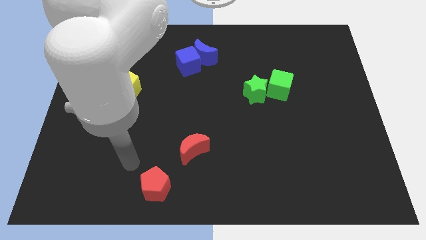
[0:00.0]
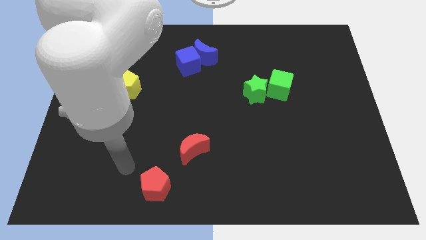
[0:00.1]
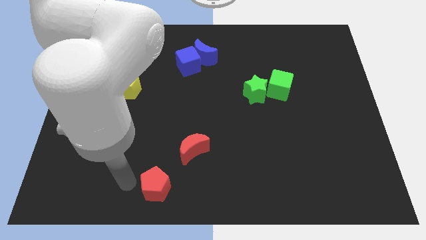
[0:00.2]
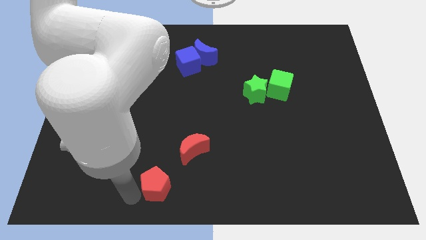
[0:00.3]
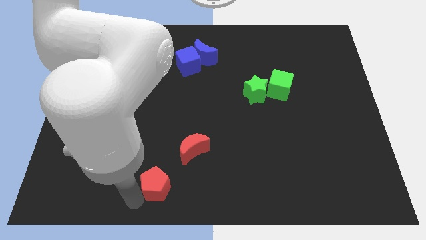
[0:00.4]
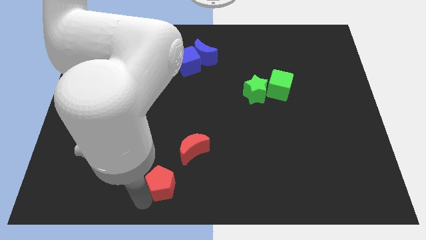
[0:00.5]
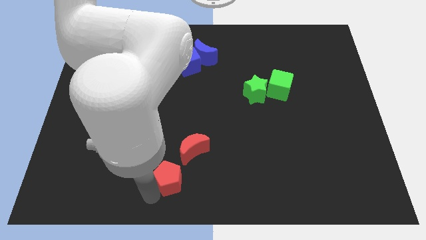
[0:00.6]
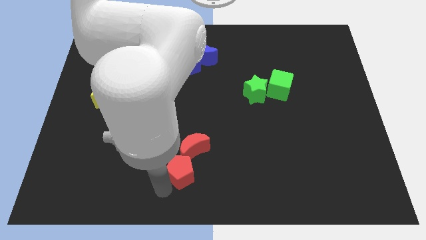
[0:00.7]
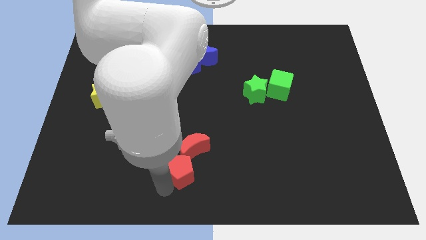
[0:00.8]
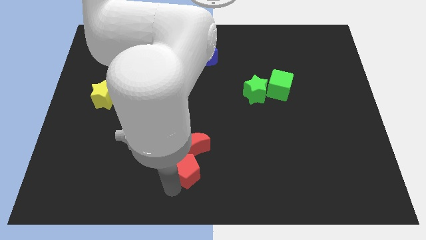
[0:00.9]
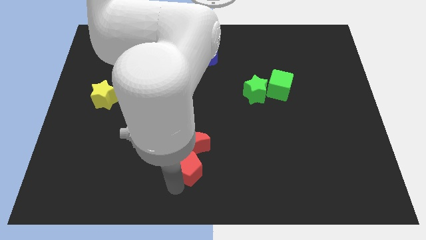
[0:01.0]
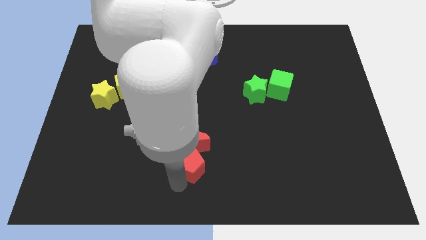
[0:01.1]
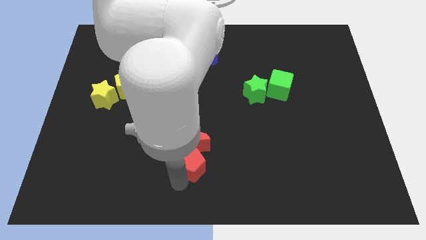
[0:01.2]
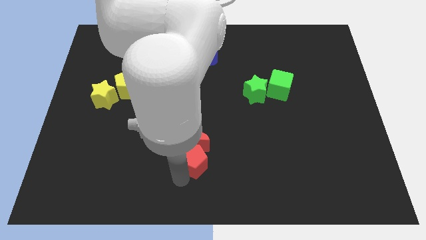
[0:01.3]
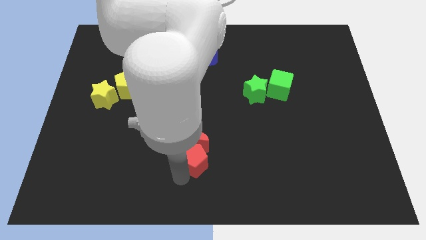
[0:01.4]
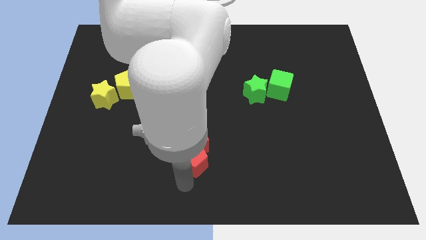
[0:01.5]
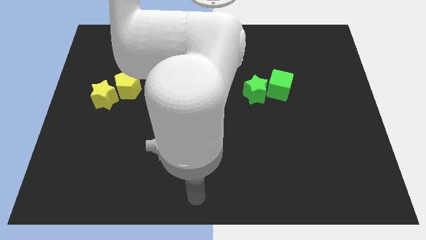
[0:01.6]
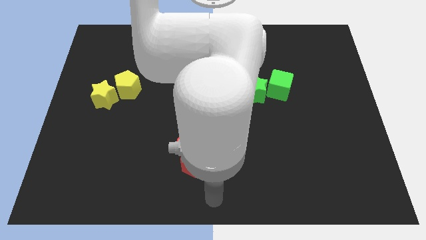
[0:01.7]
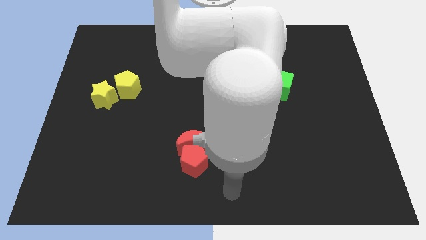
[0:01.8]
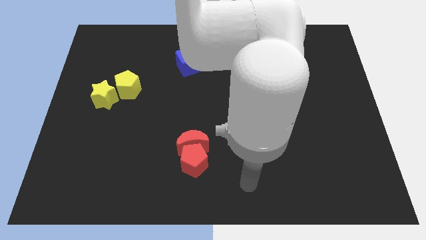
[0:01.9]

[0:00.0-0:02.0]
move the red pentagon into the red crescent

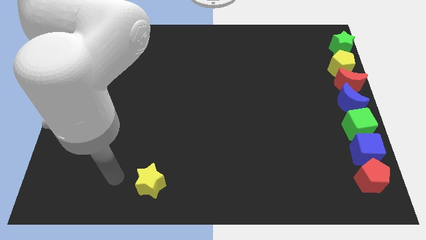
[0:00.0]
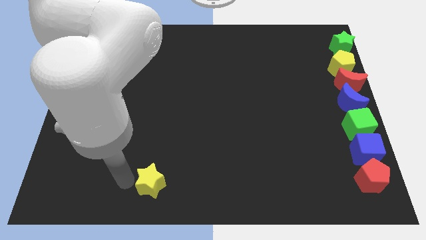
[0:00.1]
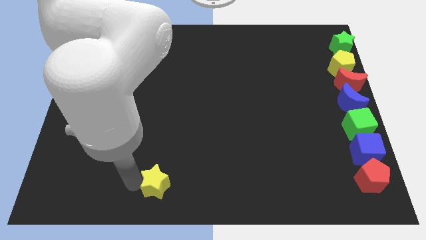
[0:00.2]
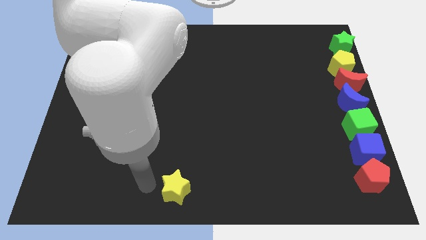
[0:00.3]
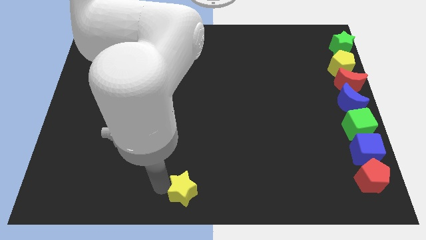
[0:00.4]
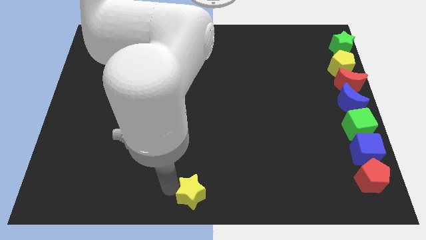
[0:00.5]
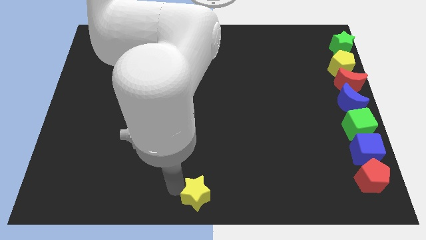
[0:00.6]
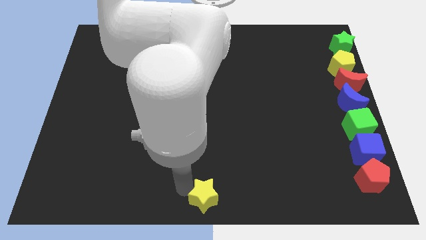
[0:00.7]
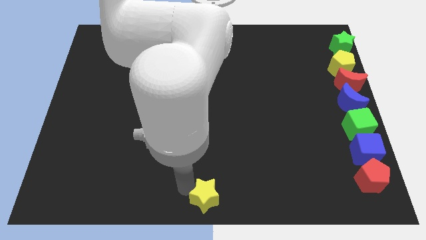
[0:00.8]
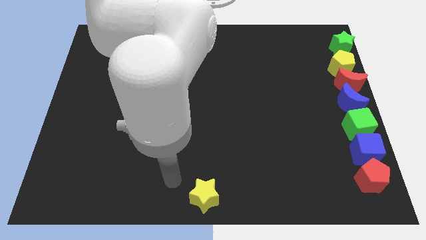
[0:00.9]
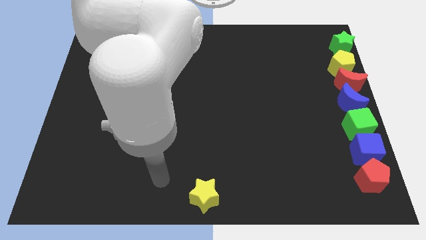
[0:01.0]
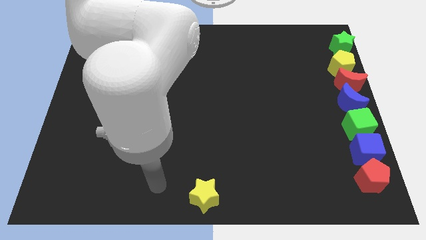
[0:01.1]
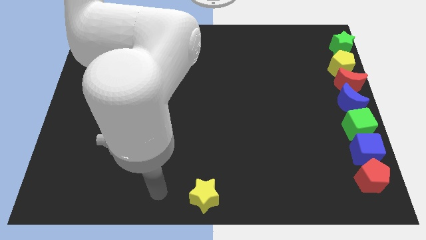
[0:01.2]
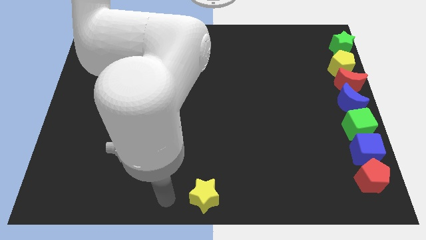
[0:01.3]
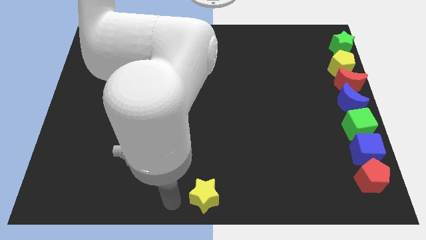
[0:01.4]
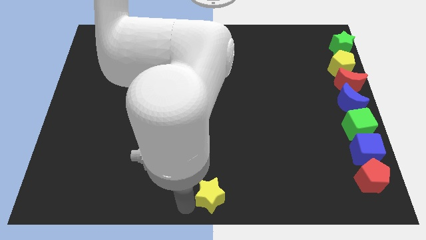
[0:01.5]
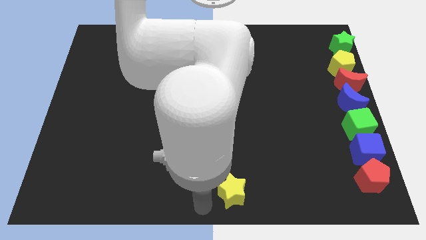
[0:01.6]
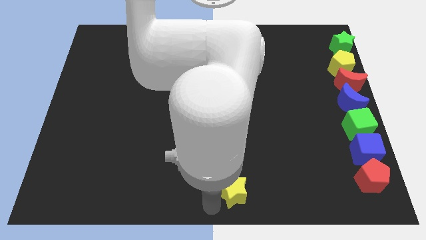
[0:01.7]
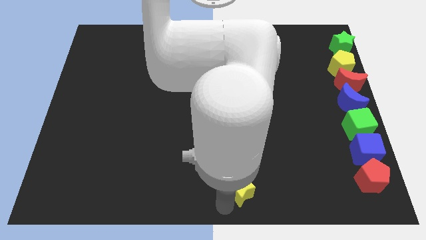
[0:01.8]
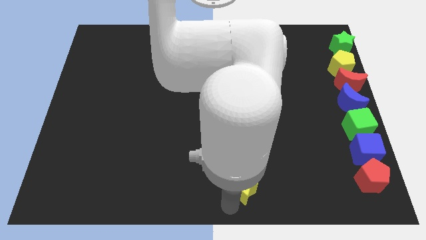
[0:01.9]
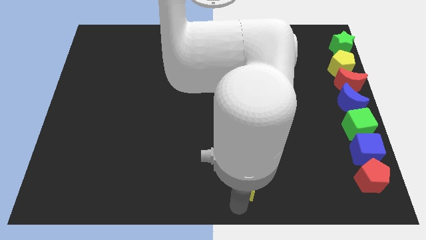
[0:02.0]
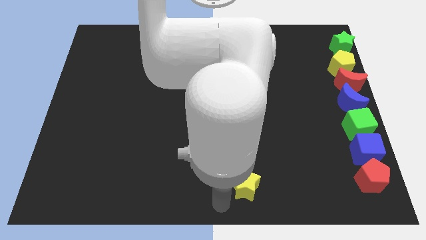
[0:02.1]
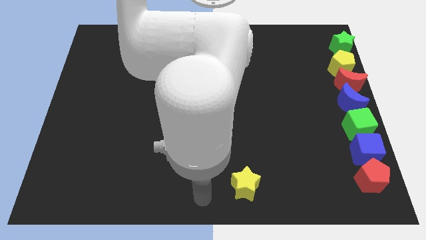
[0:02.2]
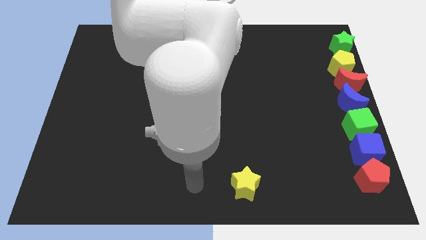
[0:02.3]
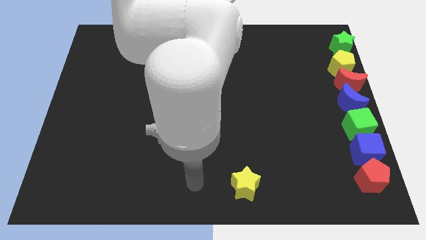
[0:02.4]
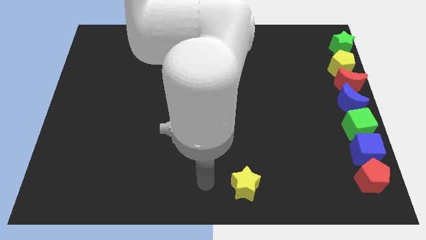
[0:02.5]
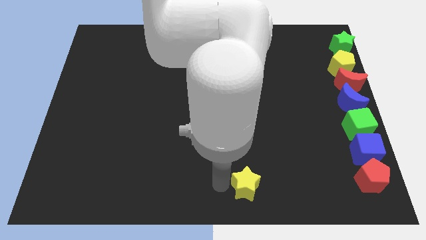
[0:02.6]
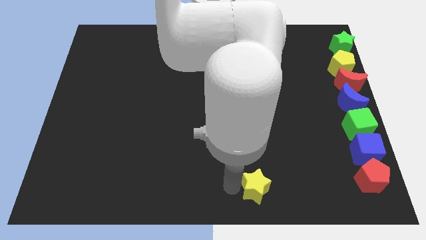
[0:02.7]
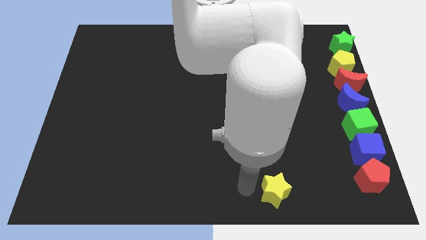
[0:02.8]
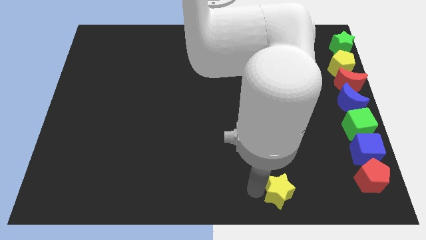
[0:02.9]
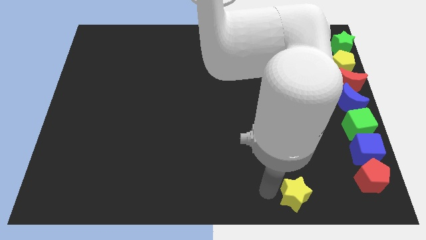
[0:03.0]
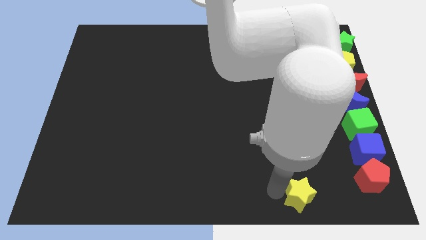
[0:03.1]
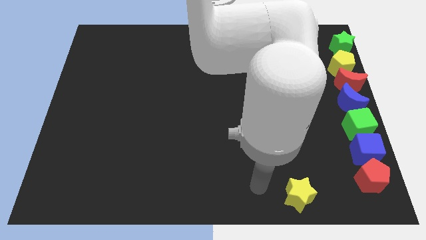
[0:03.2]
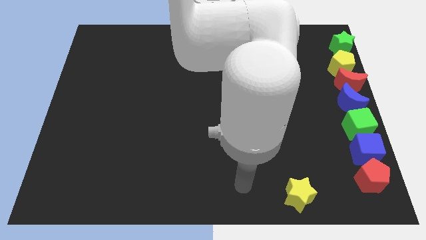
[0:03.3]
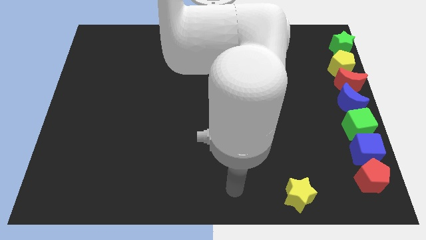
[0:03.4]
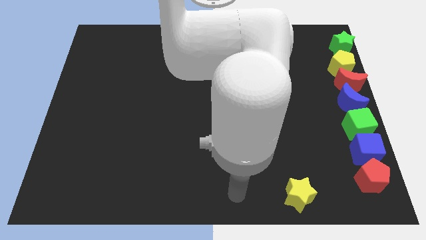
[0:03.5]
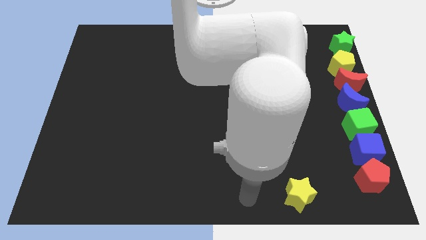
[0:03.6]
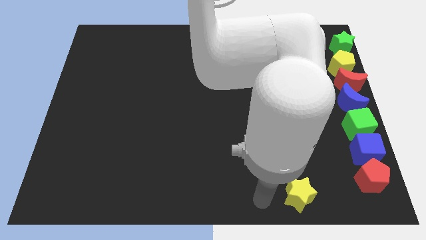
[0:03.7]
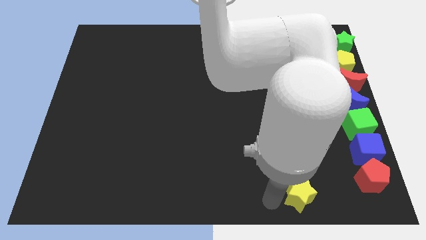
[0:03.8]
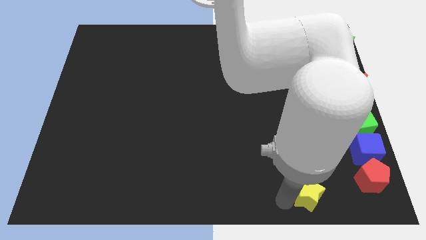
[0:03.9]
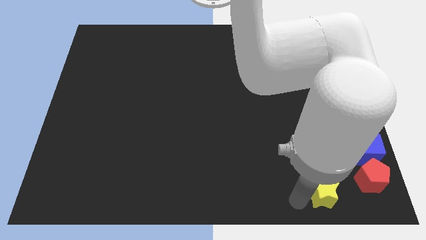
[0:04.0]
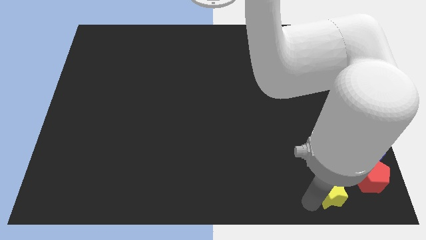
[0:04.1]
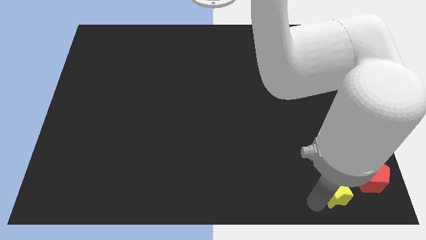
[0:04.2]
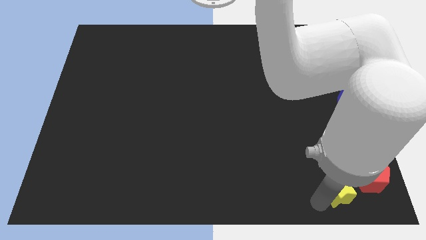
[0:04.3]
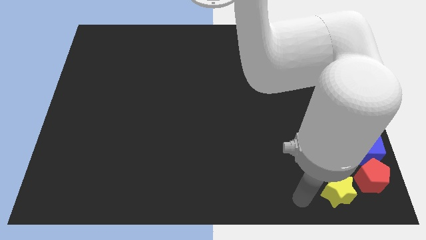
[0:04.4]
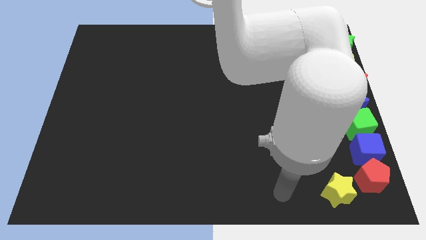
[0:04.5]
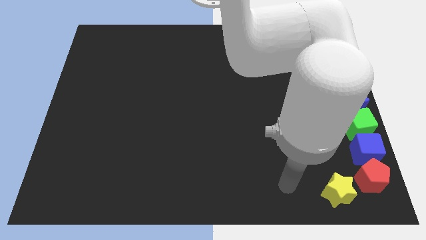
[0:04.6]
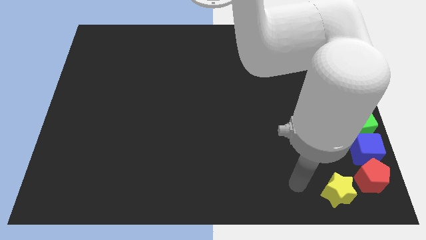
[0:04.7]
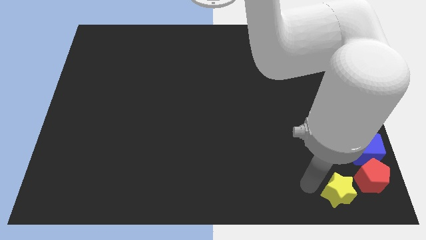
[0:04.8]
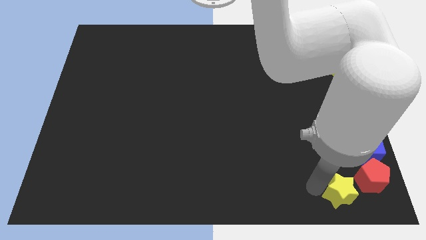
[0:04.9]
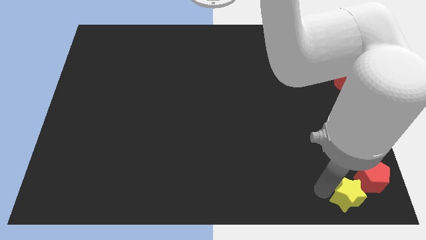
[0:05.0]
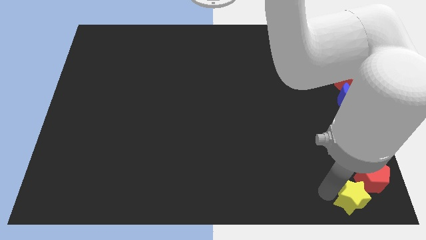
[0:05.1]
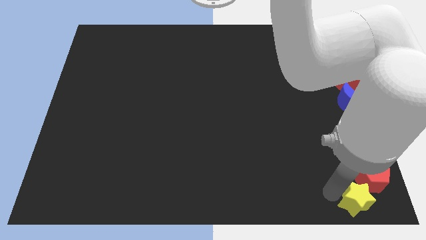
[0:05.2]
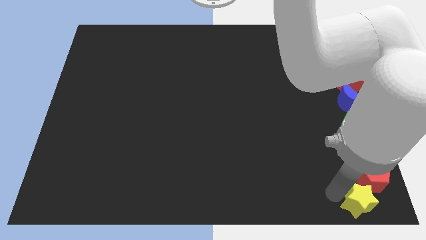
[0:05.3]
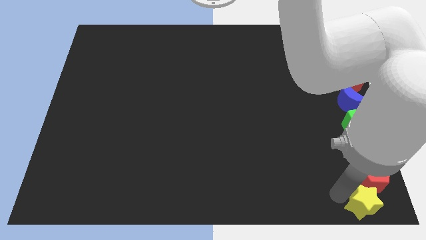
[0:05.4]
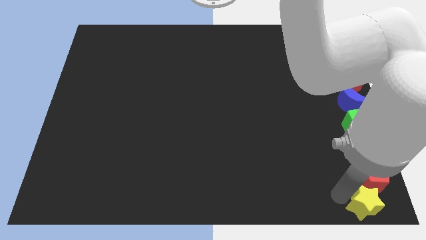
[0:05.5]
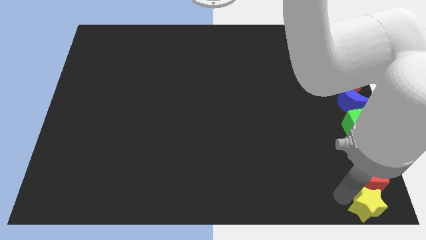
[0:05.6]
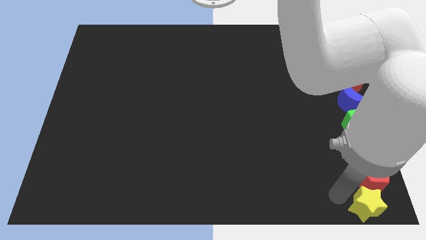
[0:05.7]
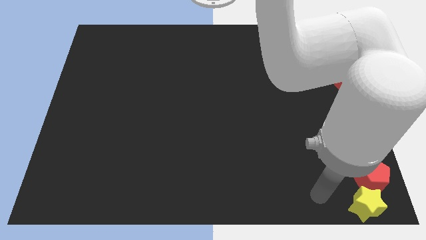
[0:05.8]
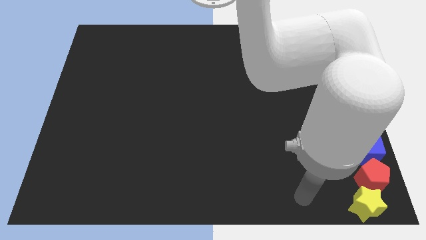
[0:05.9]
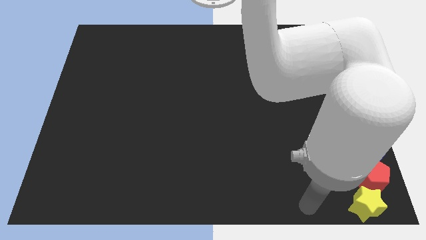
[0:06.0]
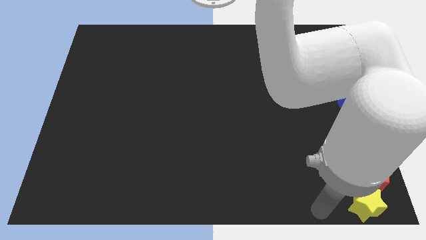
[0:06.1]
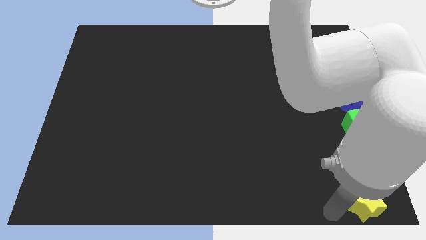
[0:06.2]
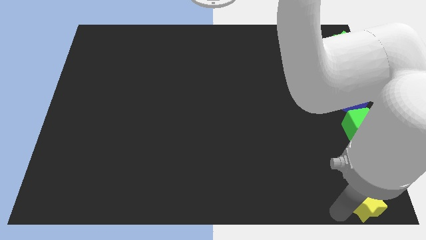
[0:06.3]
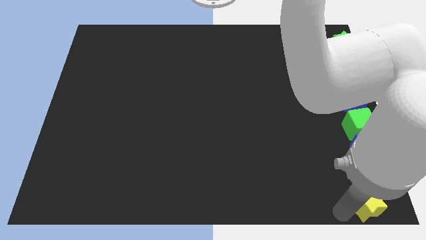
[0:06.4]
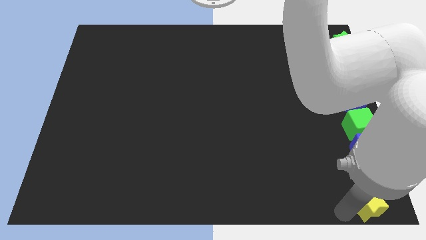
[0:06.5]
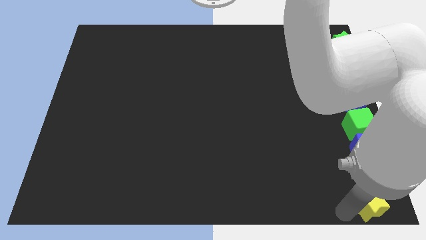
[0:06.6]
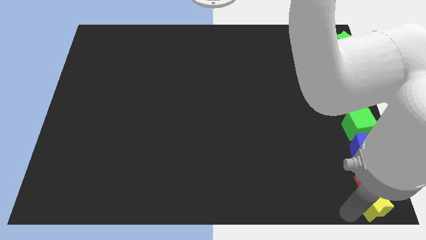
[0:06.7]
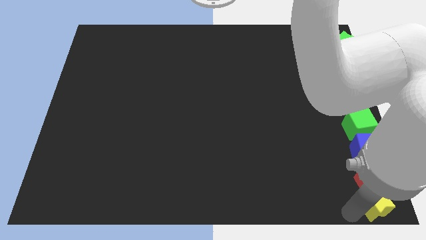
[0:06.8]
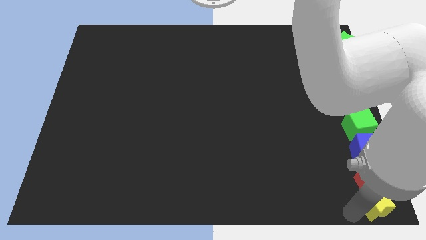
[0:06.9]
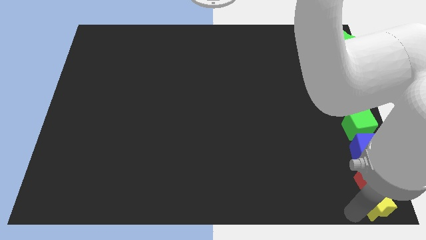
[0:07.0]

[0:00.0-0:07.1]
move the yellow star below the red pentagon

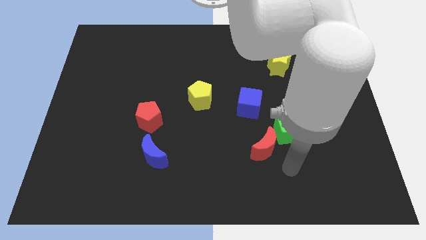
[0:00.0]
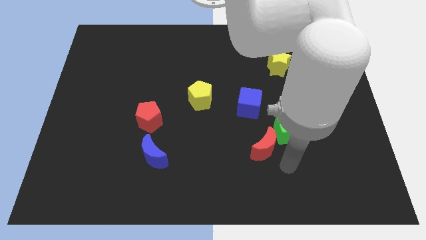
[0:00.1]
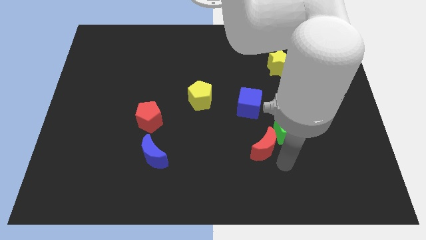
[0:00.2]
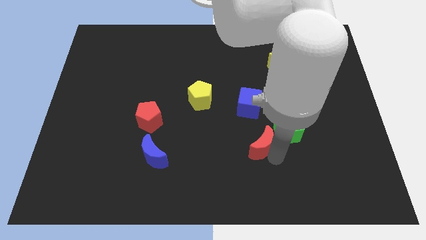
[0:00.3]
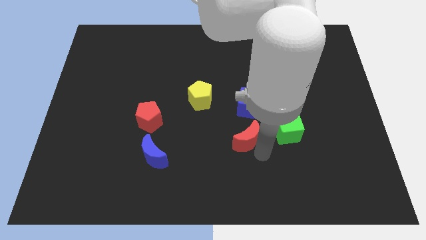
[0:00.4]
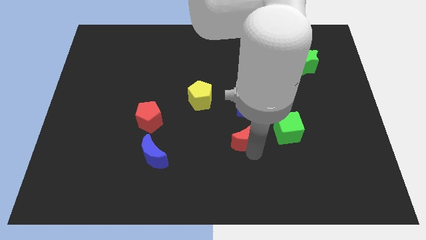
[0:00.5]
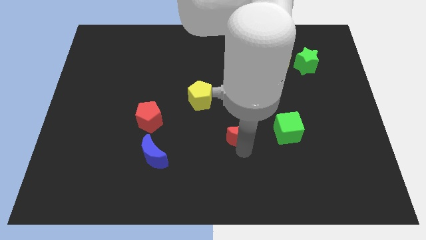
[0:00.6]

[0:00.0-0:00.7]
place the red crescent to the left of the green cube
